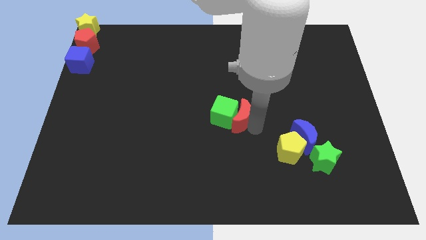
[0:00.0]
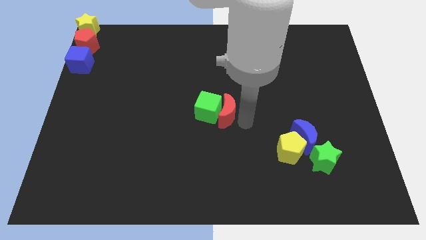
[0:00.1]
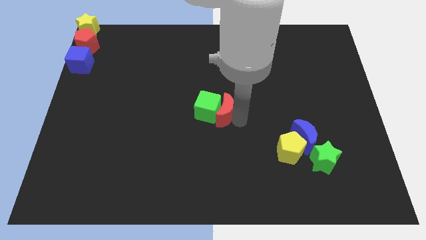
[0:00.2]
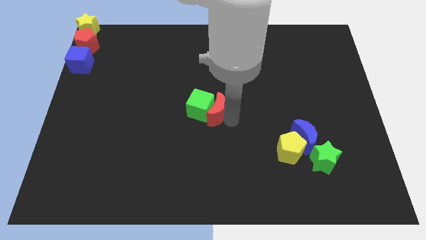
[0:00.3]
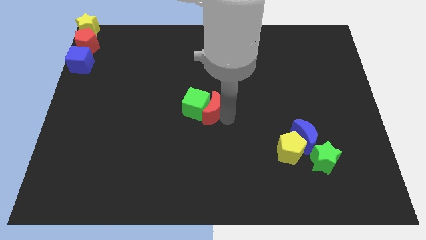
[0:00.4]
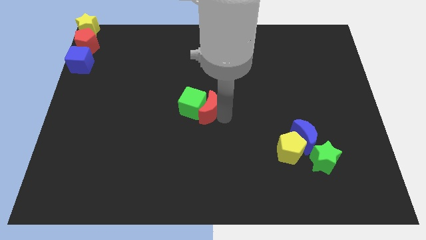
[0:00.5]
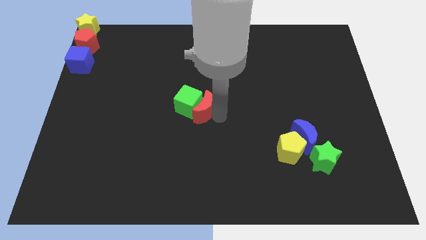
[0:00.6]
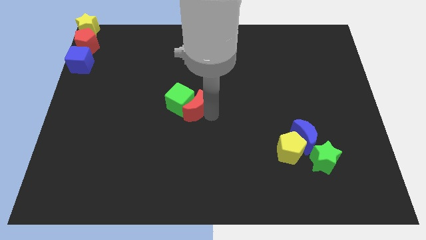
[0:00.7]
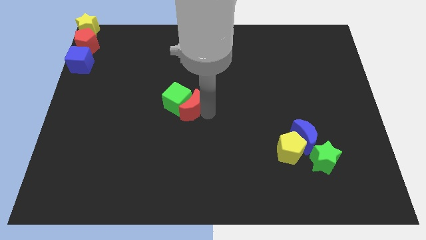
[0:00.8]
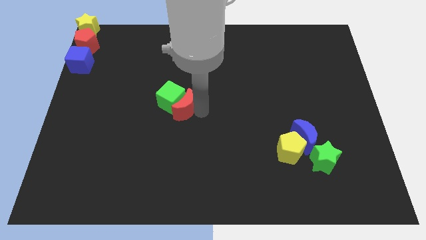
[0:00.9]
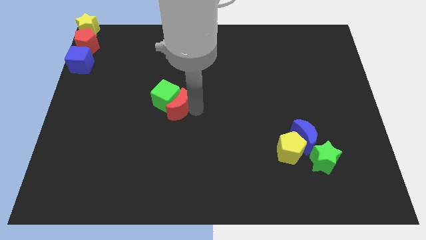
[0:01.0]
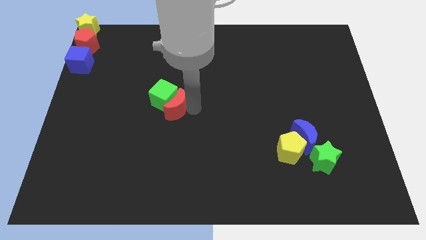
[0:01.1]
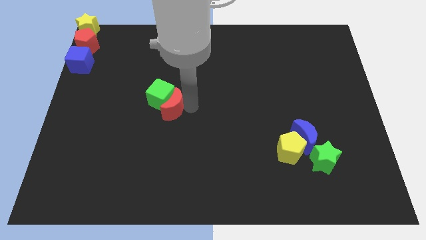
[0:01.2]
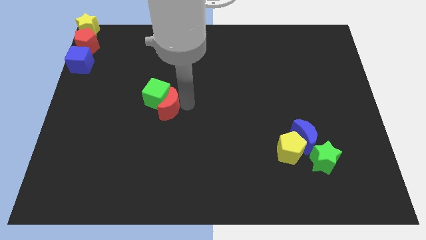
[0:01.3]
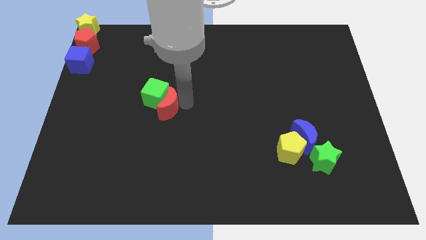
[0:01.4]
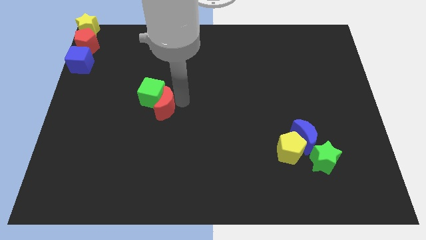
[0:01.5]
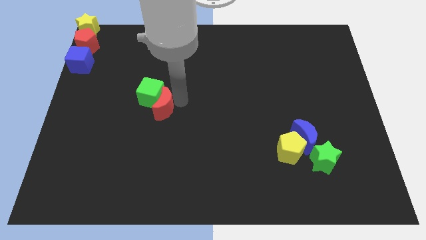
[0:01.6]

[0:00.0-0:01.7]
move the green cube along with the red moon towards the left

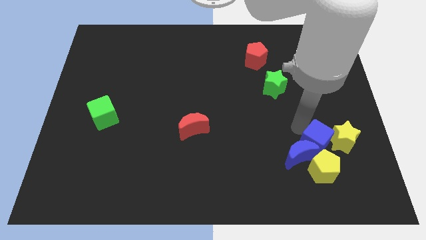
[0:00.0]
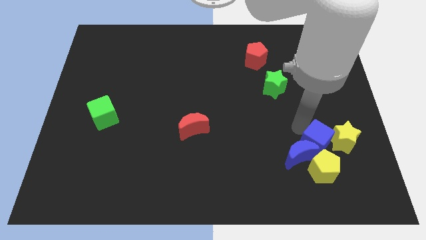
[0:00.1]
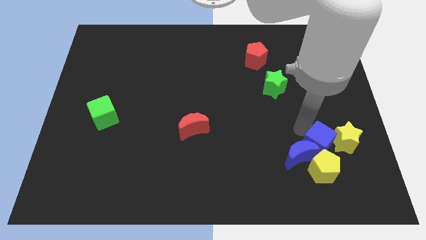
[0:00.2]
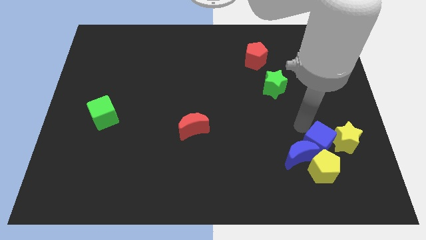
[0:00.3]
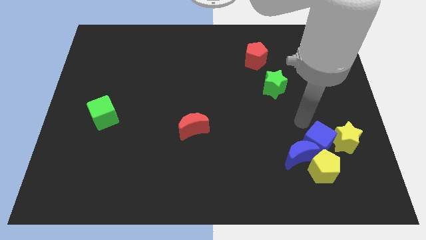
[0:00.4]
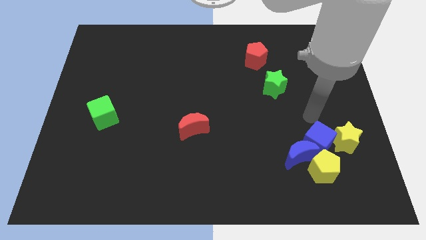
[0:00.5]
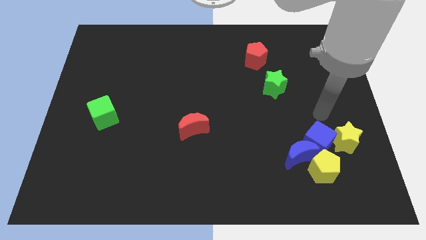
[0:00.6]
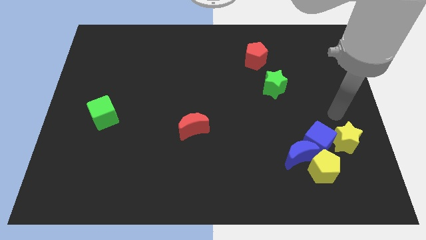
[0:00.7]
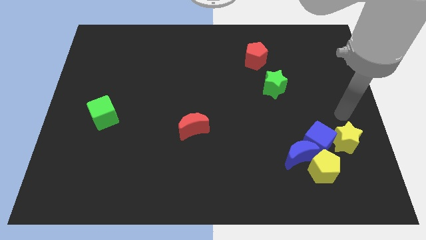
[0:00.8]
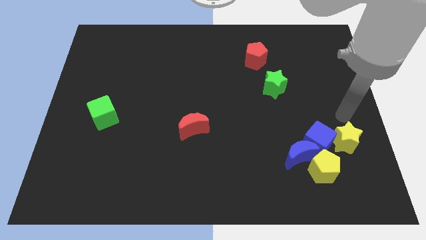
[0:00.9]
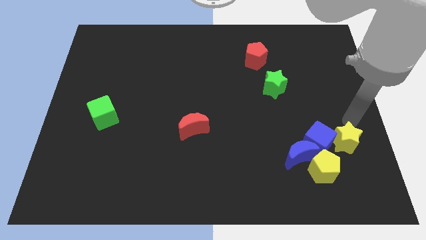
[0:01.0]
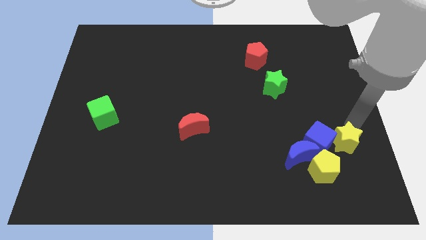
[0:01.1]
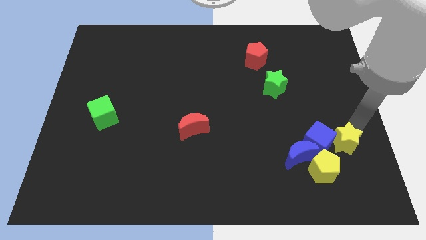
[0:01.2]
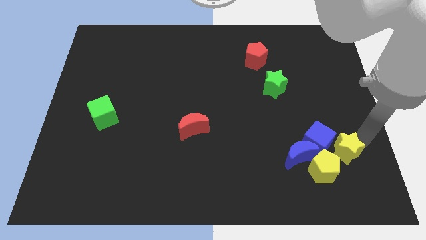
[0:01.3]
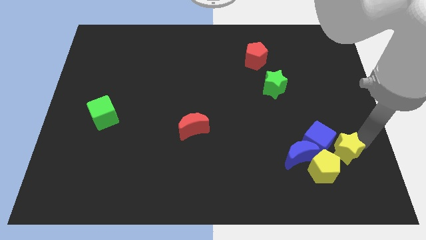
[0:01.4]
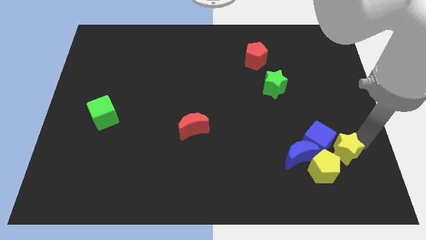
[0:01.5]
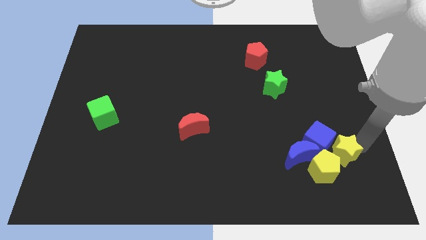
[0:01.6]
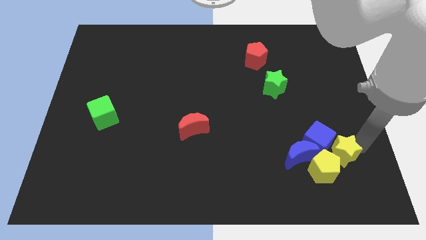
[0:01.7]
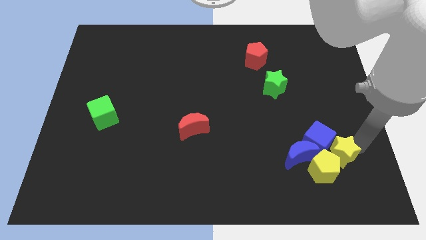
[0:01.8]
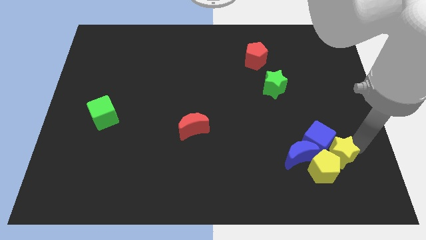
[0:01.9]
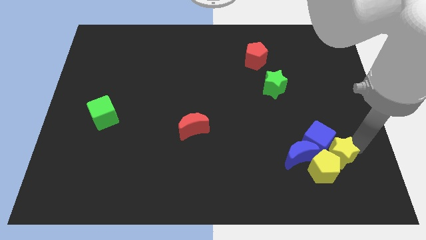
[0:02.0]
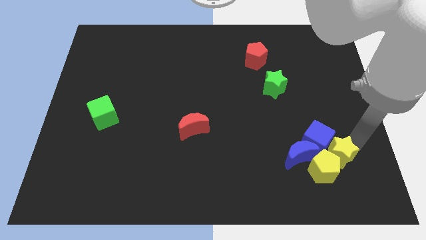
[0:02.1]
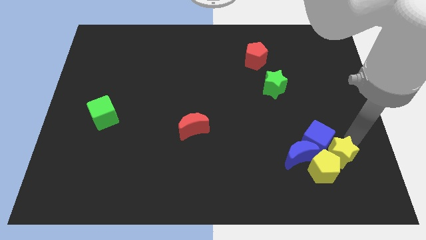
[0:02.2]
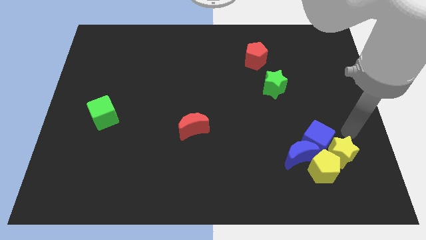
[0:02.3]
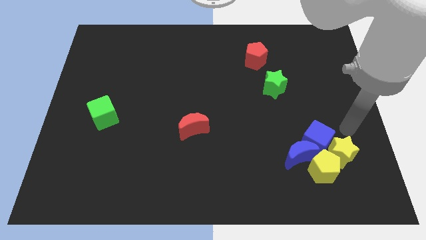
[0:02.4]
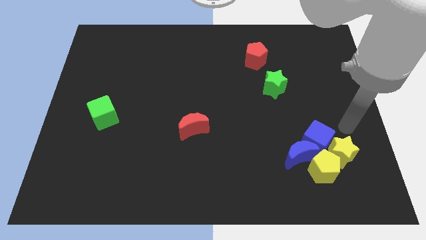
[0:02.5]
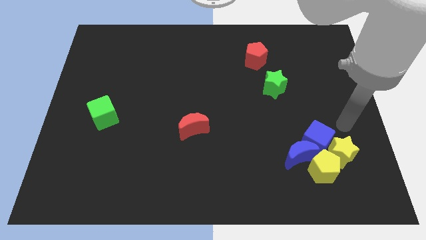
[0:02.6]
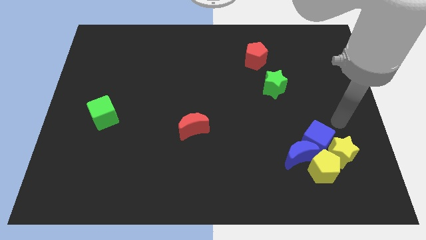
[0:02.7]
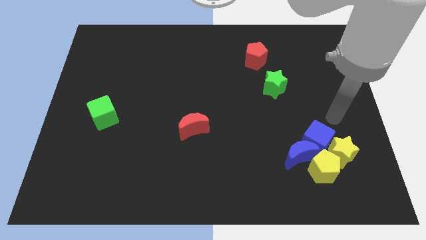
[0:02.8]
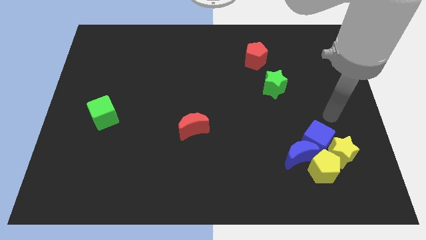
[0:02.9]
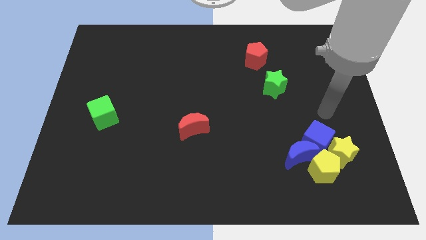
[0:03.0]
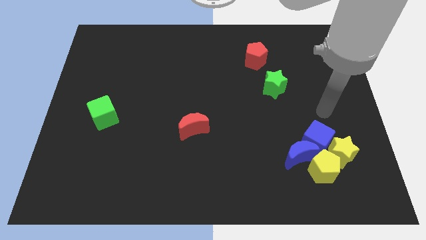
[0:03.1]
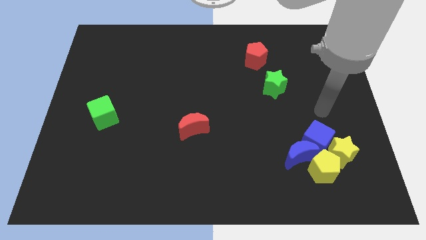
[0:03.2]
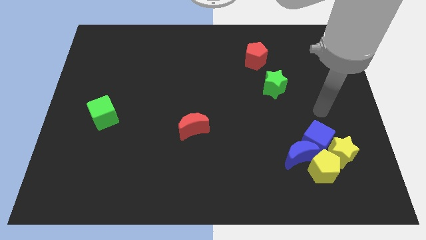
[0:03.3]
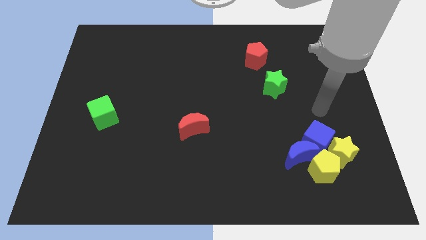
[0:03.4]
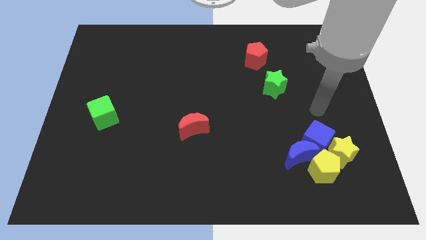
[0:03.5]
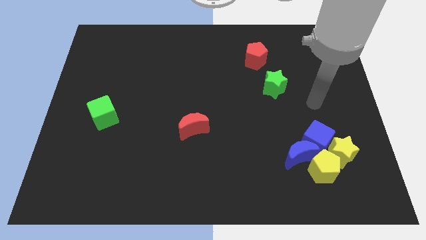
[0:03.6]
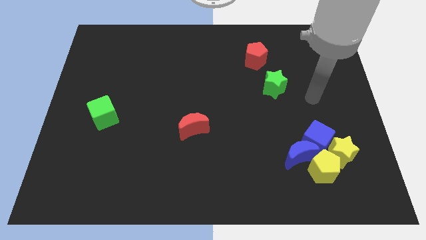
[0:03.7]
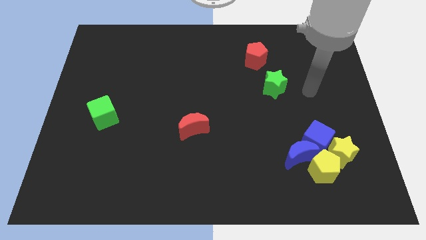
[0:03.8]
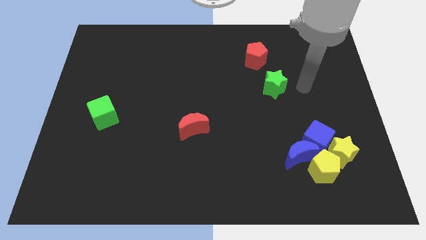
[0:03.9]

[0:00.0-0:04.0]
push the yellow star into yellow pentagon

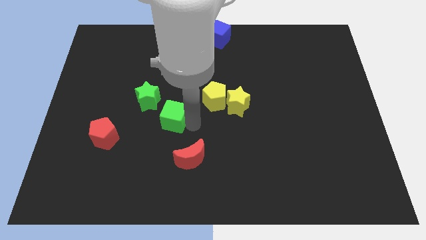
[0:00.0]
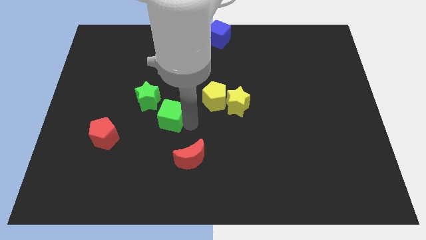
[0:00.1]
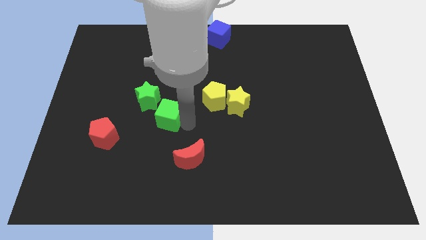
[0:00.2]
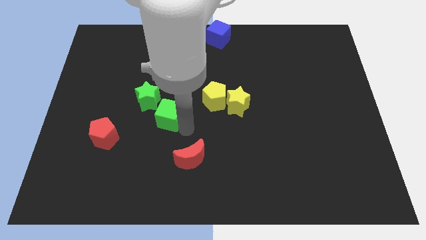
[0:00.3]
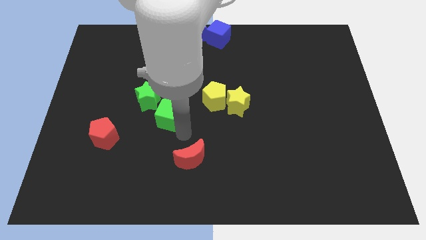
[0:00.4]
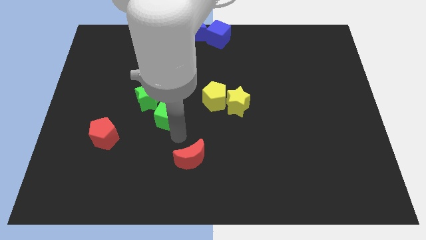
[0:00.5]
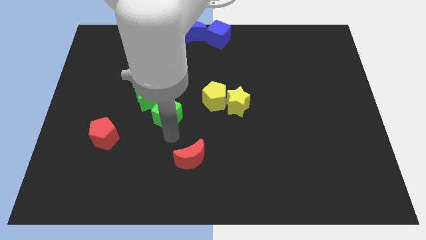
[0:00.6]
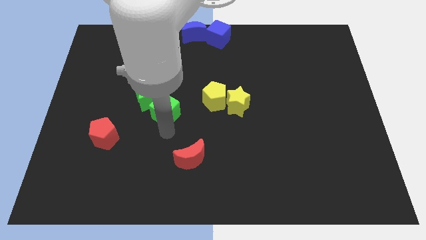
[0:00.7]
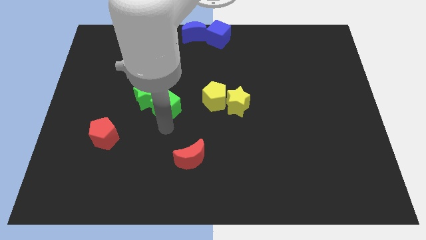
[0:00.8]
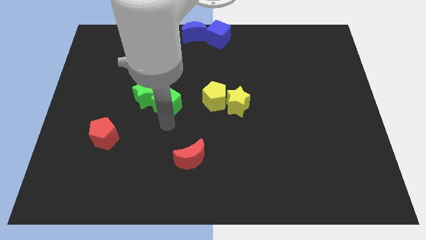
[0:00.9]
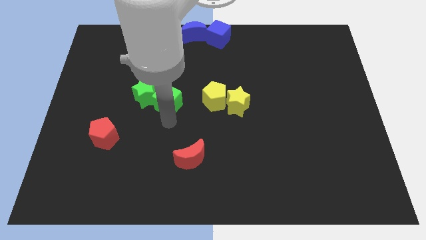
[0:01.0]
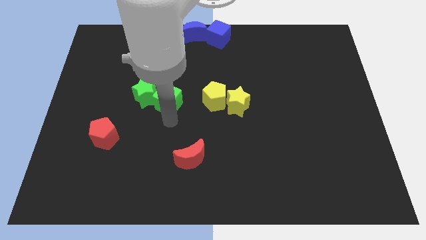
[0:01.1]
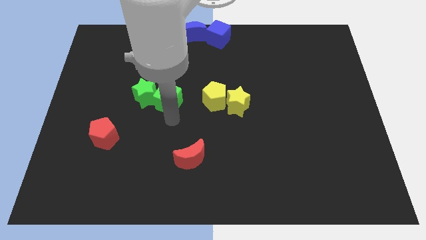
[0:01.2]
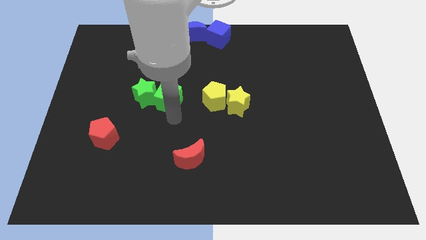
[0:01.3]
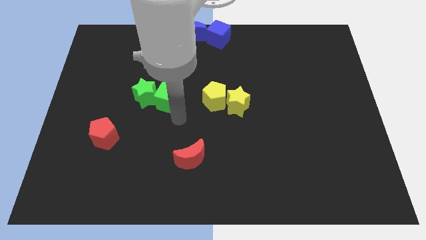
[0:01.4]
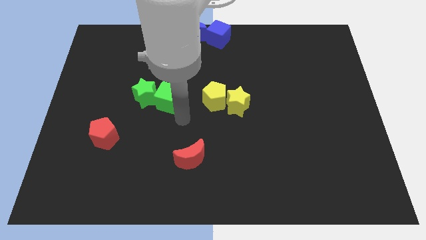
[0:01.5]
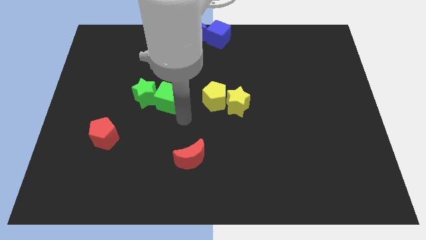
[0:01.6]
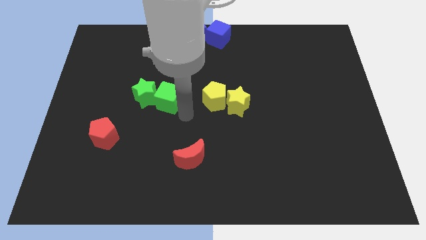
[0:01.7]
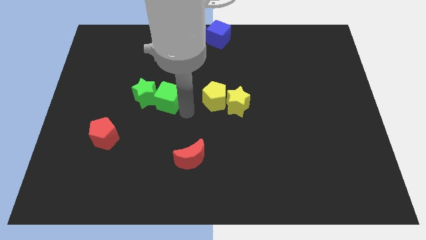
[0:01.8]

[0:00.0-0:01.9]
push the green cube into the green star

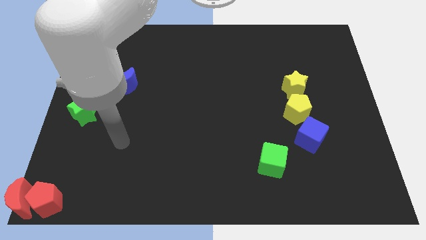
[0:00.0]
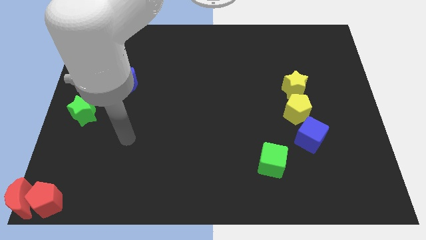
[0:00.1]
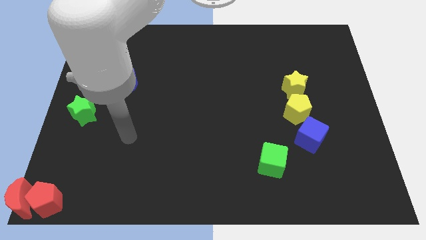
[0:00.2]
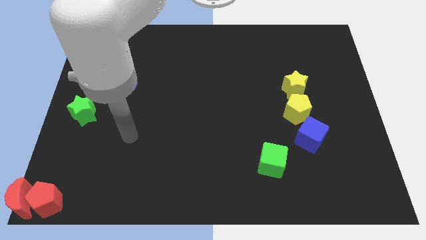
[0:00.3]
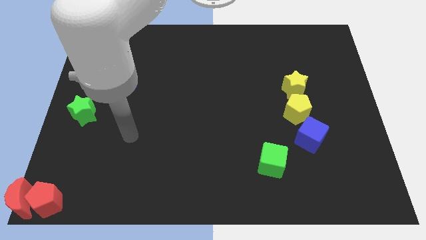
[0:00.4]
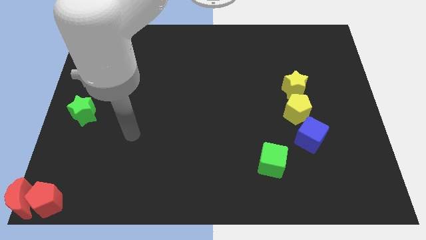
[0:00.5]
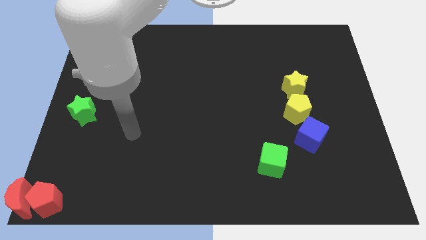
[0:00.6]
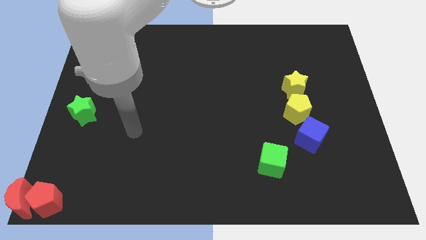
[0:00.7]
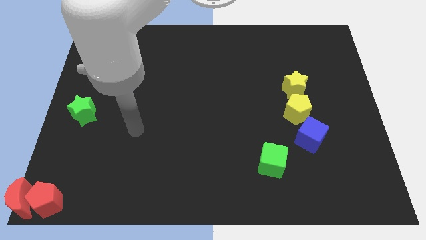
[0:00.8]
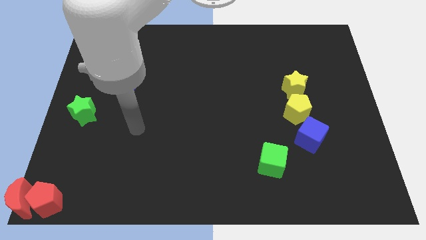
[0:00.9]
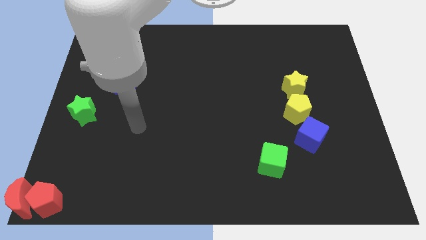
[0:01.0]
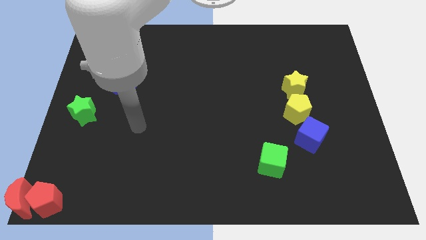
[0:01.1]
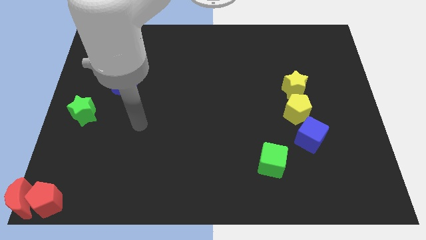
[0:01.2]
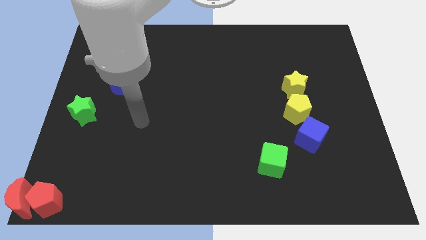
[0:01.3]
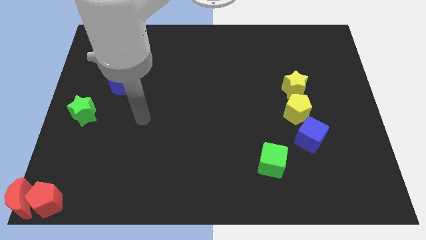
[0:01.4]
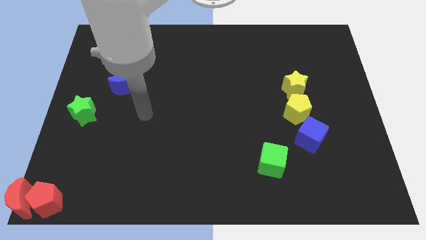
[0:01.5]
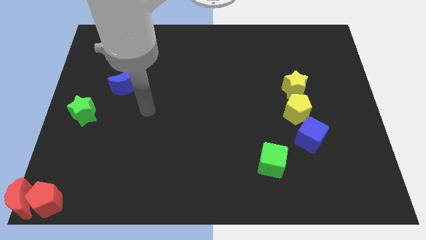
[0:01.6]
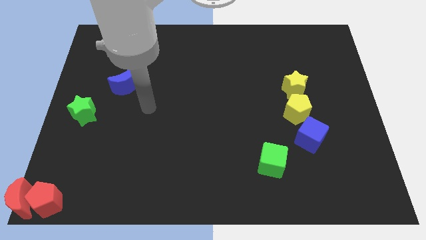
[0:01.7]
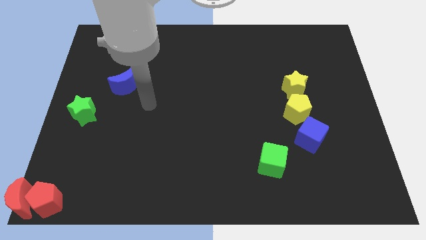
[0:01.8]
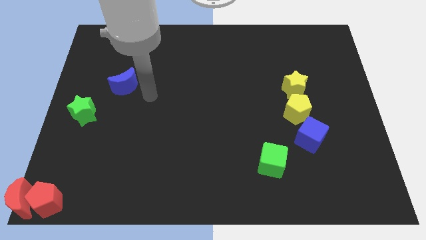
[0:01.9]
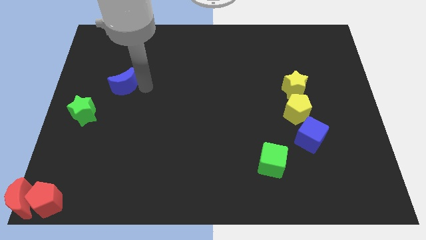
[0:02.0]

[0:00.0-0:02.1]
move the arm close to the blue crescent
